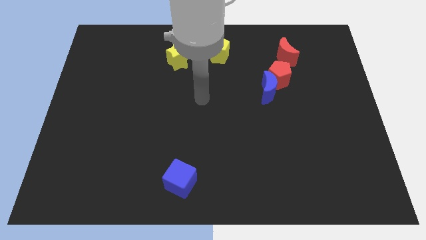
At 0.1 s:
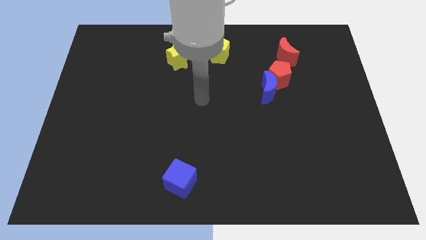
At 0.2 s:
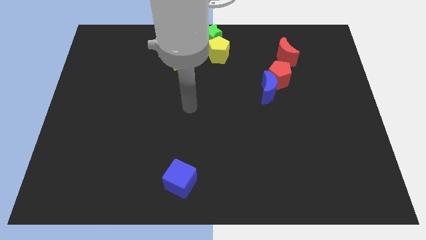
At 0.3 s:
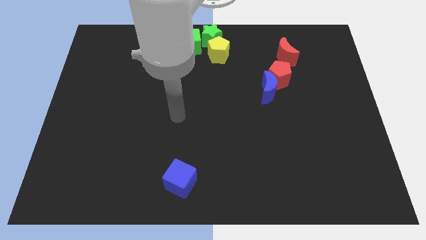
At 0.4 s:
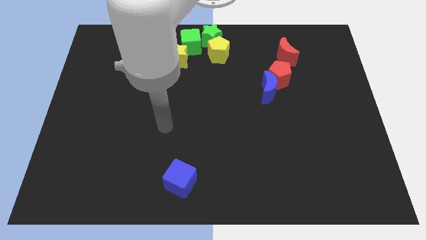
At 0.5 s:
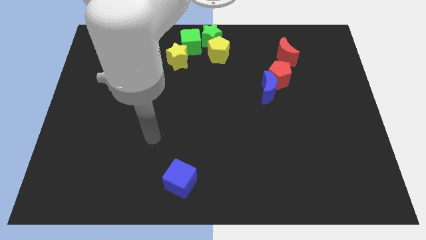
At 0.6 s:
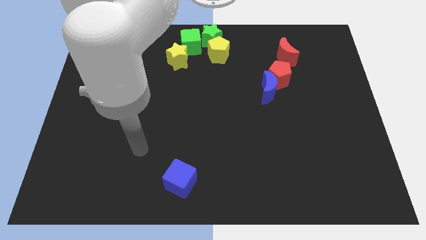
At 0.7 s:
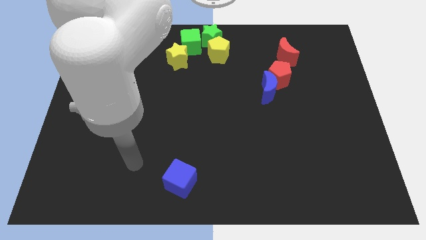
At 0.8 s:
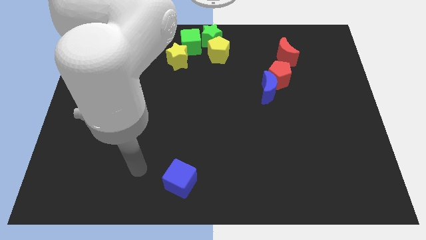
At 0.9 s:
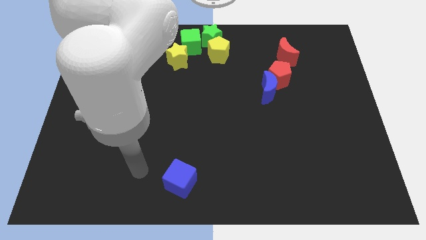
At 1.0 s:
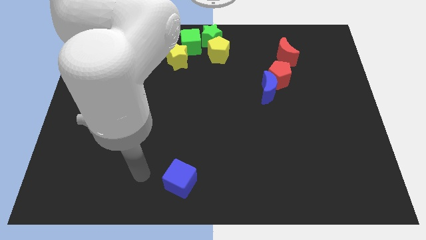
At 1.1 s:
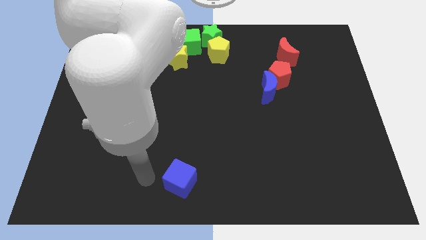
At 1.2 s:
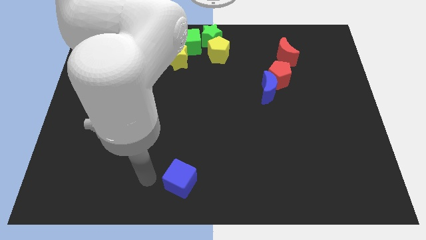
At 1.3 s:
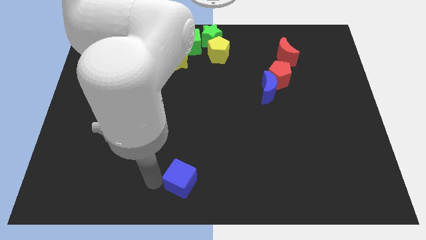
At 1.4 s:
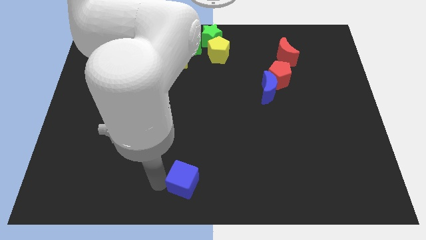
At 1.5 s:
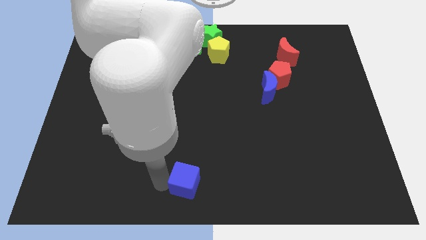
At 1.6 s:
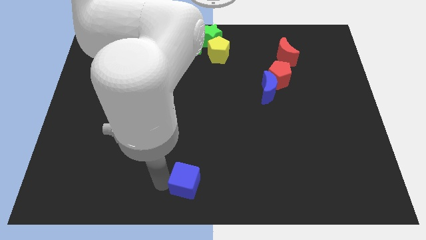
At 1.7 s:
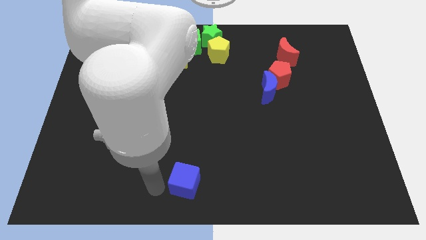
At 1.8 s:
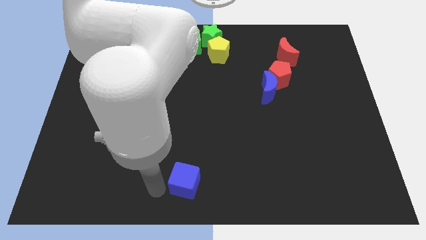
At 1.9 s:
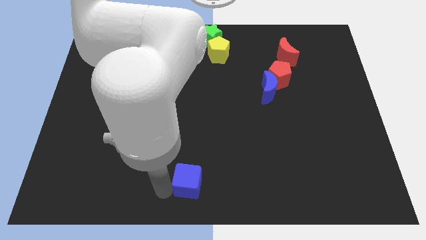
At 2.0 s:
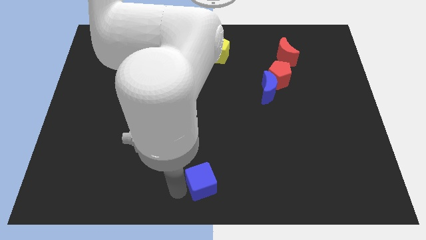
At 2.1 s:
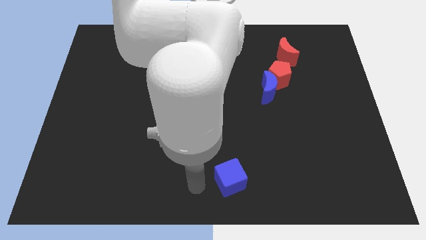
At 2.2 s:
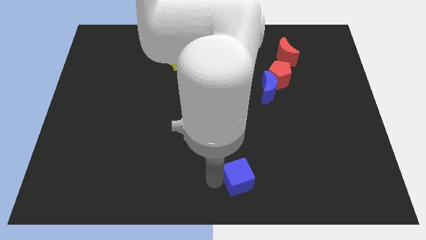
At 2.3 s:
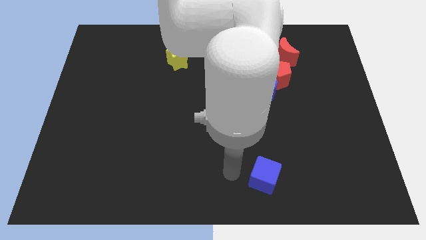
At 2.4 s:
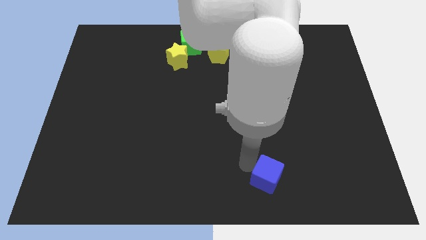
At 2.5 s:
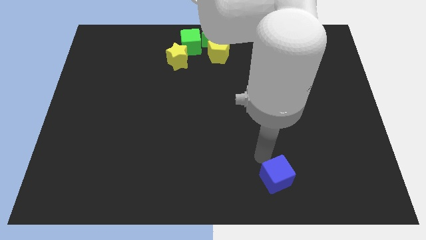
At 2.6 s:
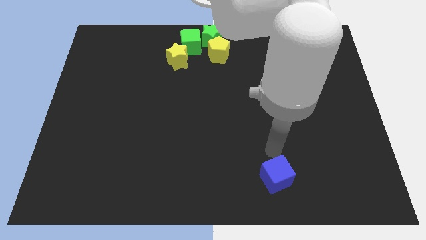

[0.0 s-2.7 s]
push the blue cube to the bottom of the blue crescent

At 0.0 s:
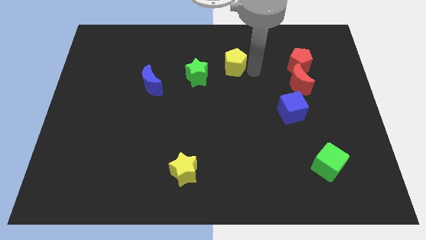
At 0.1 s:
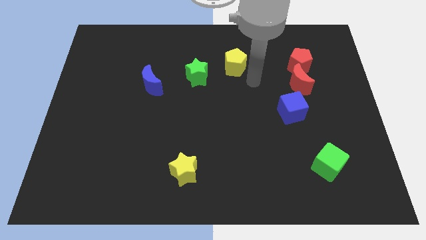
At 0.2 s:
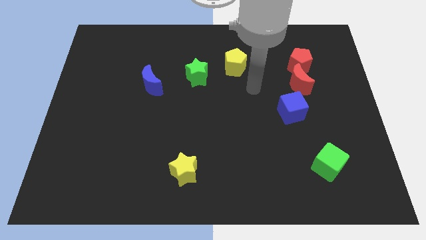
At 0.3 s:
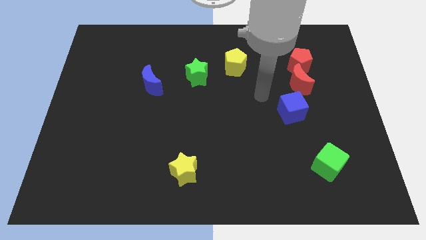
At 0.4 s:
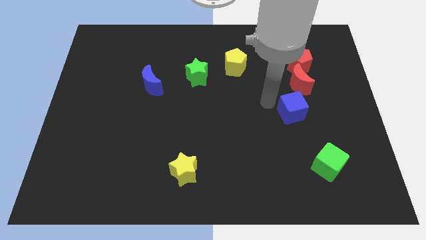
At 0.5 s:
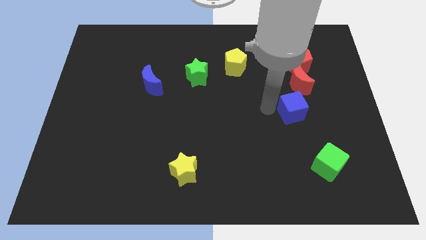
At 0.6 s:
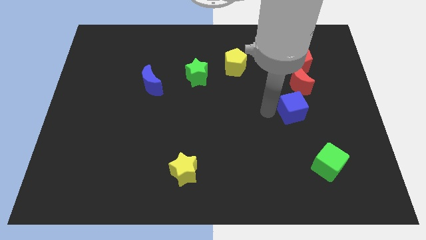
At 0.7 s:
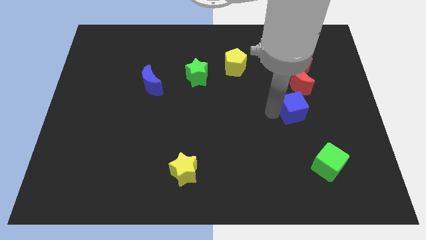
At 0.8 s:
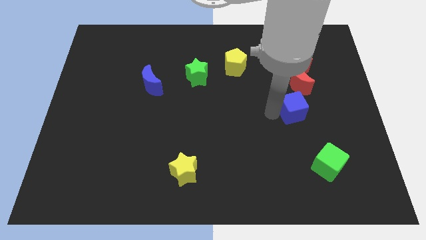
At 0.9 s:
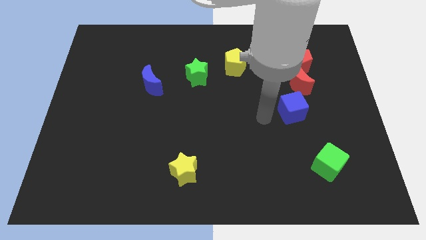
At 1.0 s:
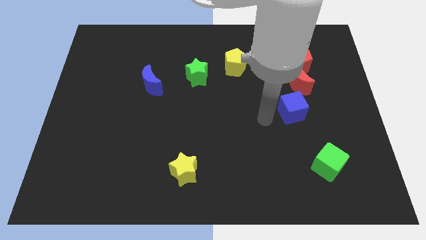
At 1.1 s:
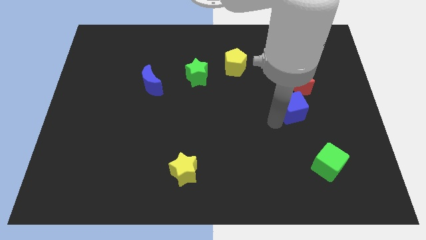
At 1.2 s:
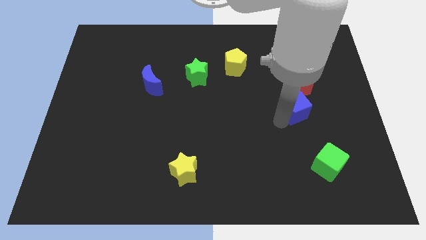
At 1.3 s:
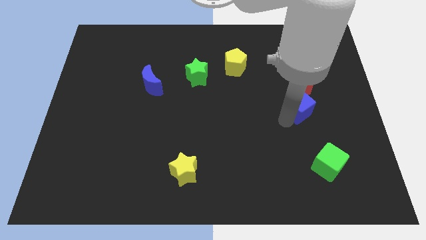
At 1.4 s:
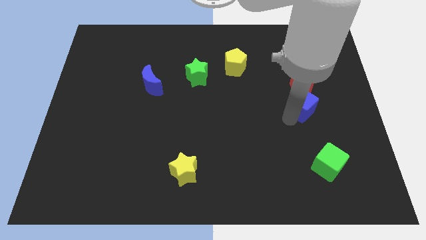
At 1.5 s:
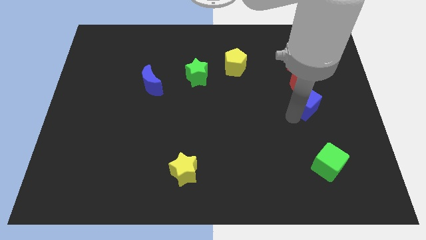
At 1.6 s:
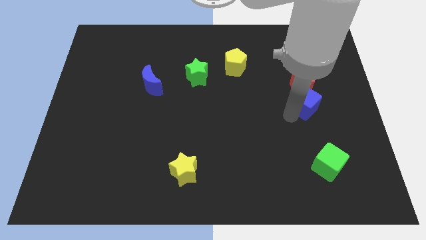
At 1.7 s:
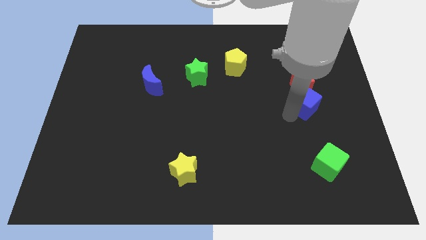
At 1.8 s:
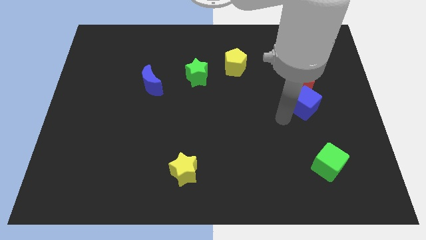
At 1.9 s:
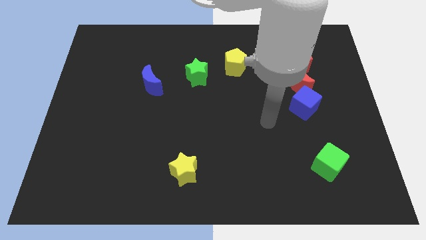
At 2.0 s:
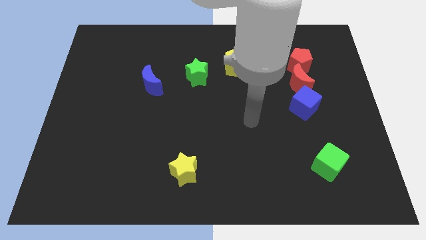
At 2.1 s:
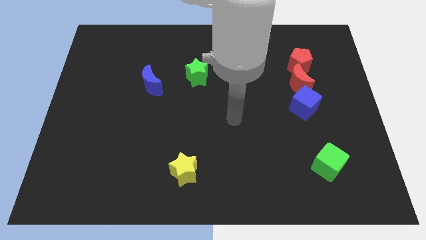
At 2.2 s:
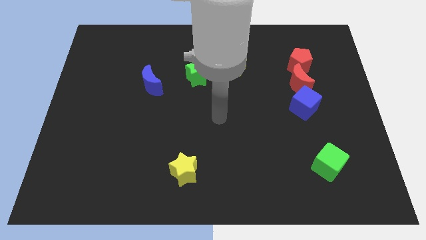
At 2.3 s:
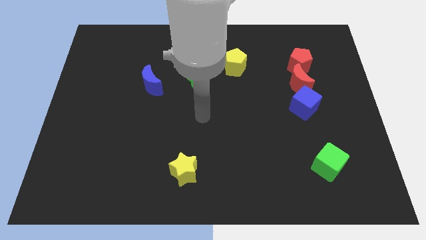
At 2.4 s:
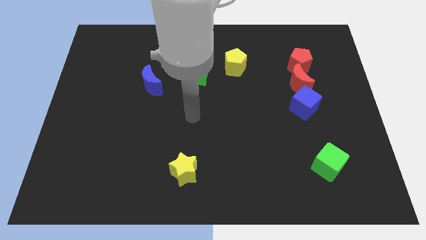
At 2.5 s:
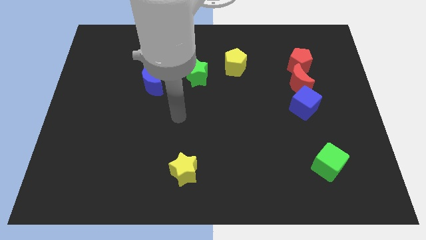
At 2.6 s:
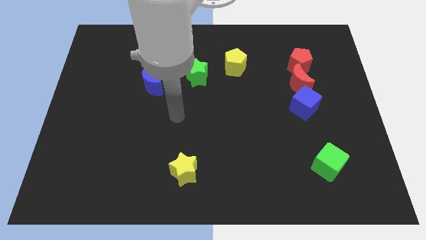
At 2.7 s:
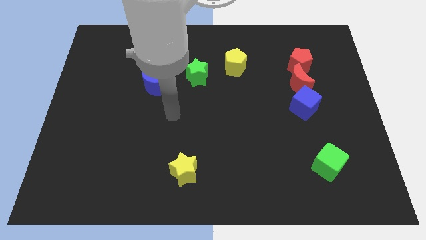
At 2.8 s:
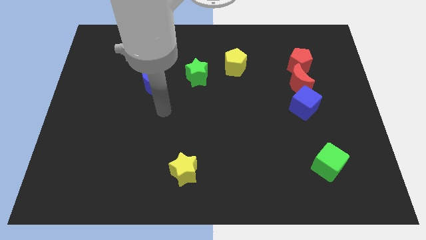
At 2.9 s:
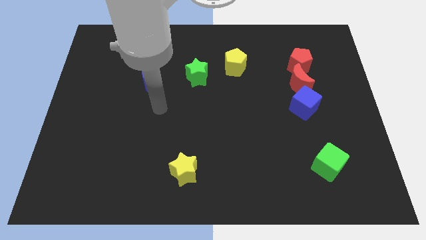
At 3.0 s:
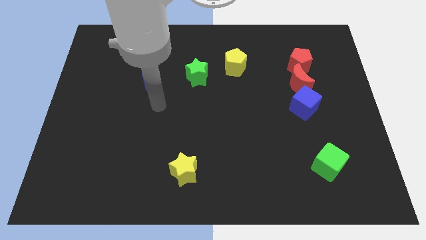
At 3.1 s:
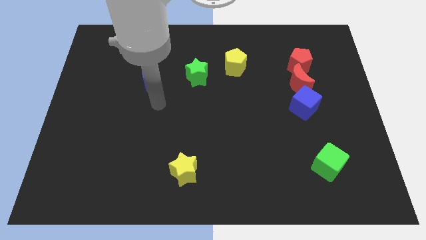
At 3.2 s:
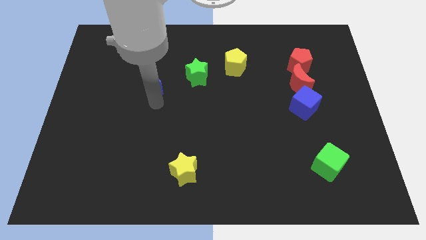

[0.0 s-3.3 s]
place the blue cube to the bottom of red crescent

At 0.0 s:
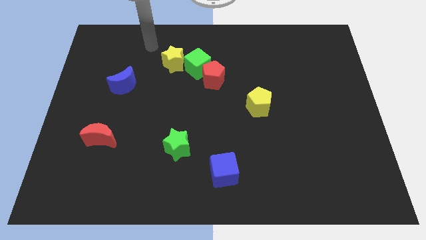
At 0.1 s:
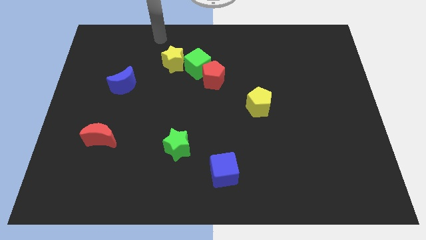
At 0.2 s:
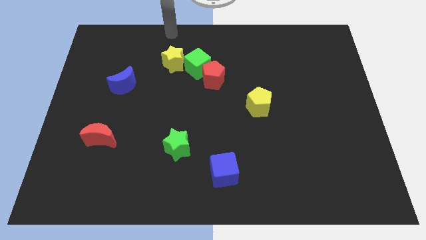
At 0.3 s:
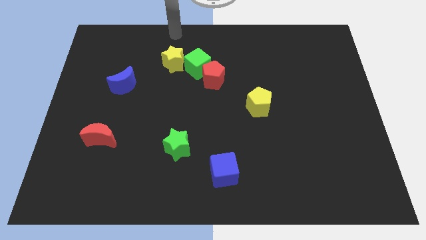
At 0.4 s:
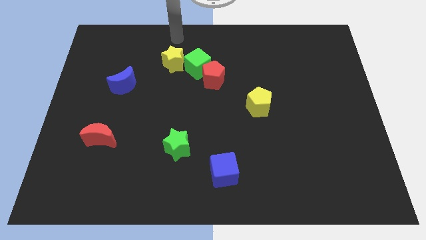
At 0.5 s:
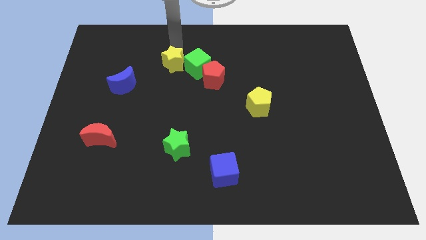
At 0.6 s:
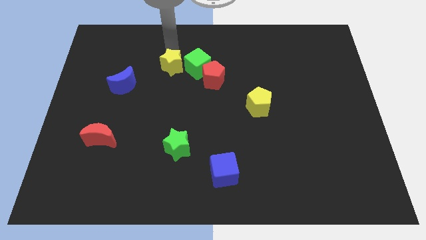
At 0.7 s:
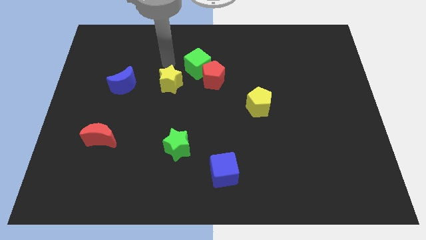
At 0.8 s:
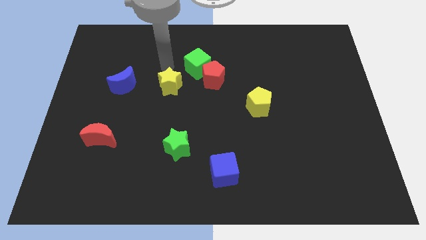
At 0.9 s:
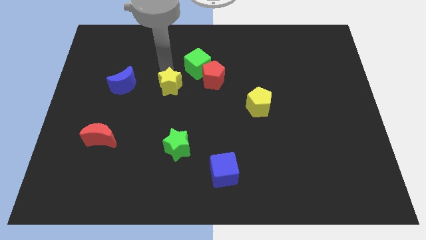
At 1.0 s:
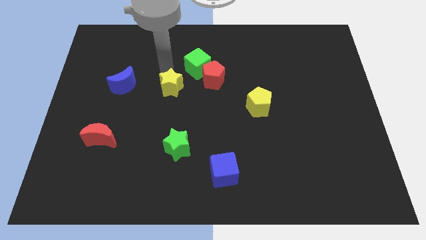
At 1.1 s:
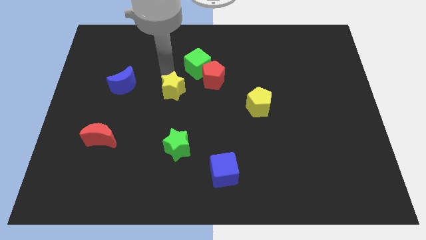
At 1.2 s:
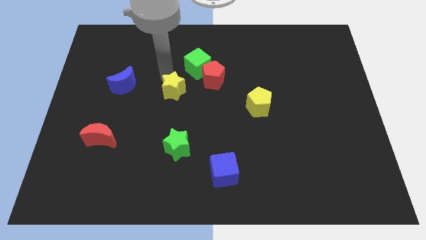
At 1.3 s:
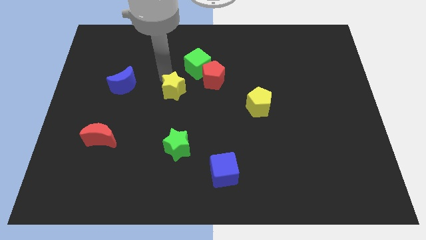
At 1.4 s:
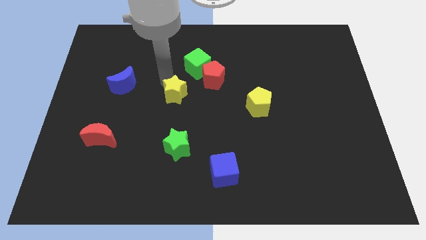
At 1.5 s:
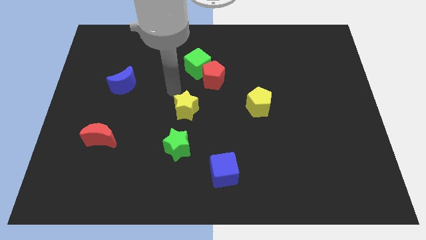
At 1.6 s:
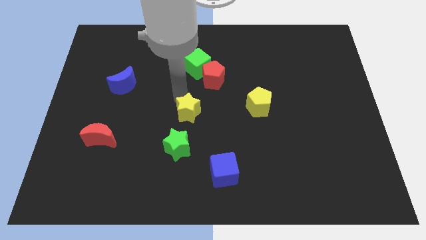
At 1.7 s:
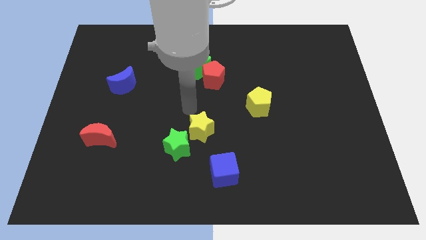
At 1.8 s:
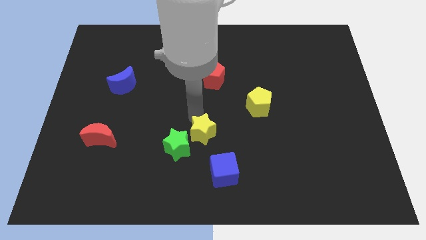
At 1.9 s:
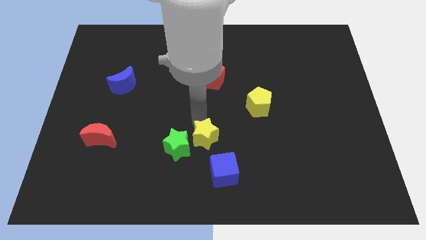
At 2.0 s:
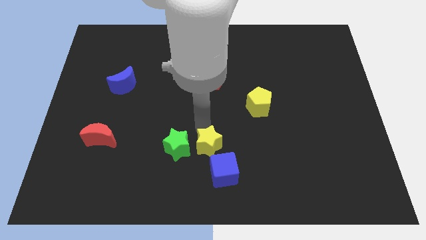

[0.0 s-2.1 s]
slide the yellow star at the top left corner of the yellow star

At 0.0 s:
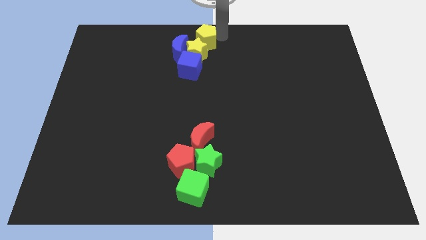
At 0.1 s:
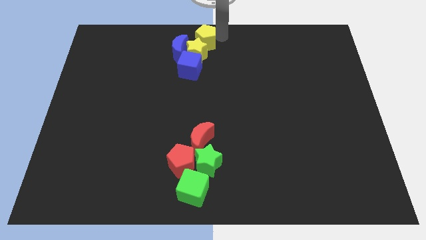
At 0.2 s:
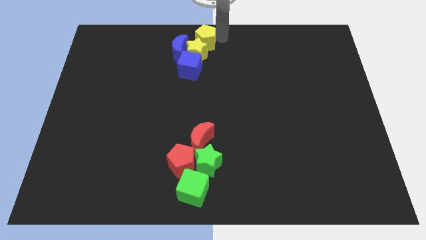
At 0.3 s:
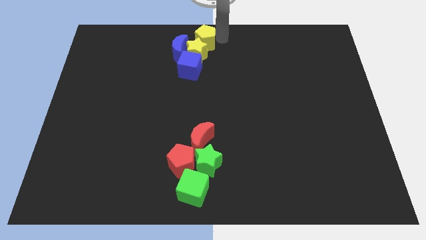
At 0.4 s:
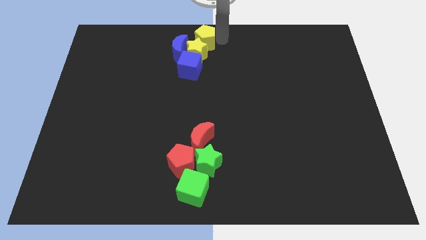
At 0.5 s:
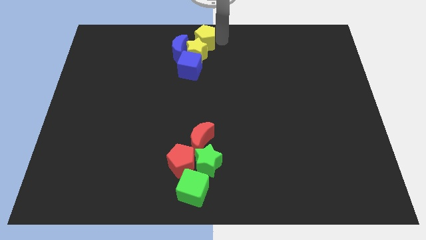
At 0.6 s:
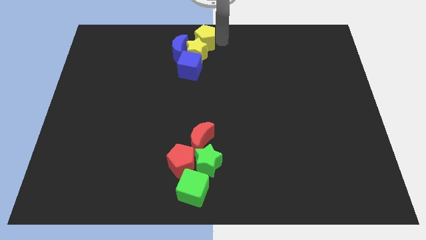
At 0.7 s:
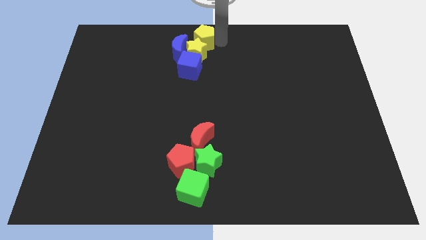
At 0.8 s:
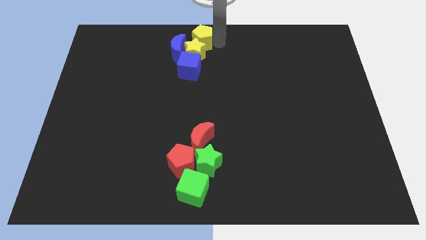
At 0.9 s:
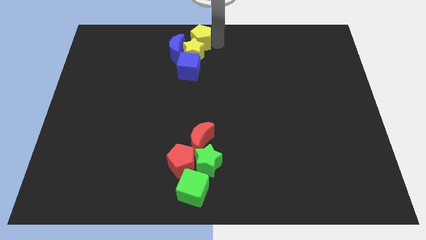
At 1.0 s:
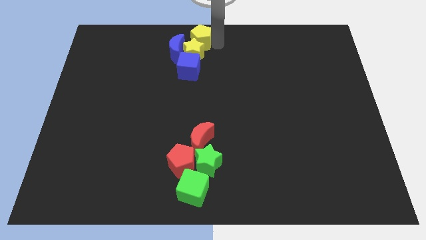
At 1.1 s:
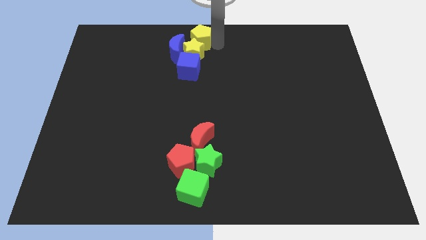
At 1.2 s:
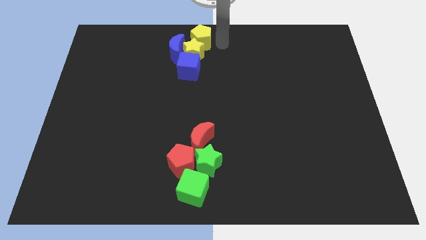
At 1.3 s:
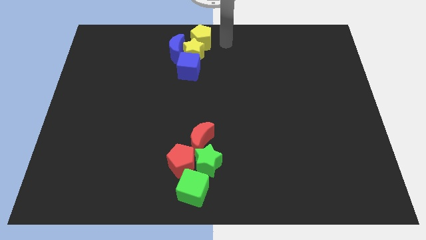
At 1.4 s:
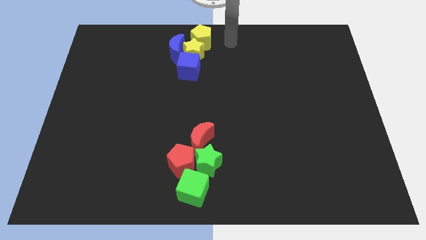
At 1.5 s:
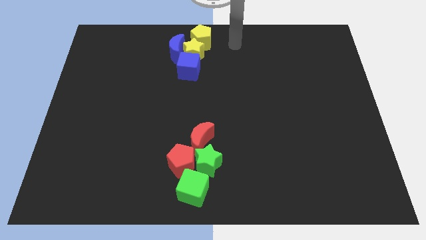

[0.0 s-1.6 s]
slightly push the yellow pentagon into the yellow star at the top center
